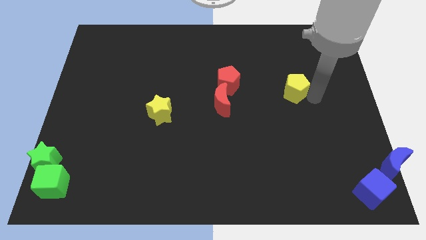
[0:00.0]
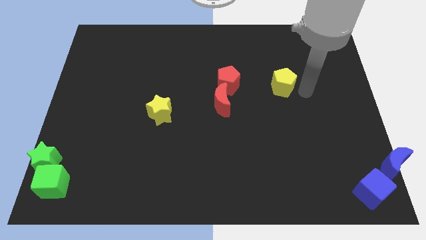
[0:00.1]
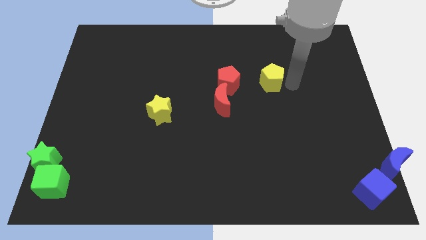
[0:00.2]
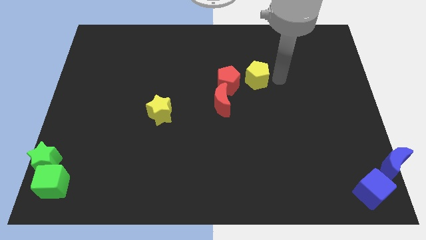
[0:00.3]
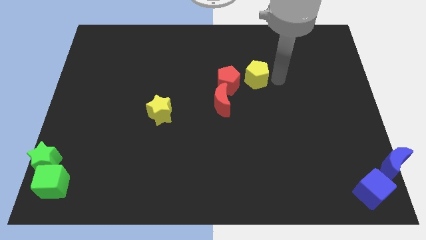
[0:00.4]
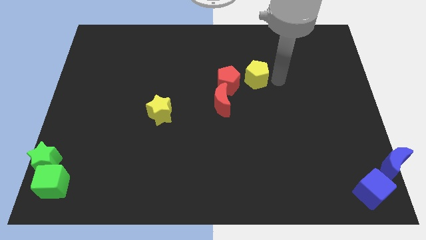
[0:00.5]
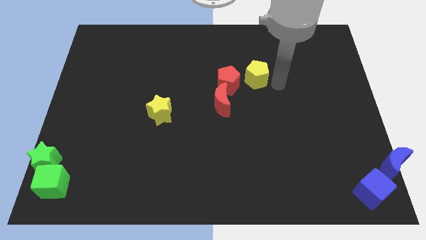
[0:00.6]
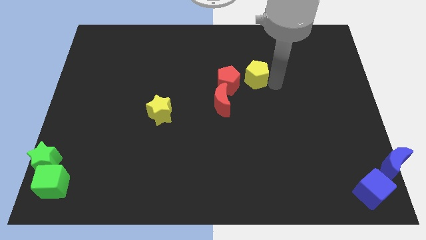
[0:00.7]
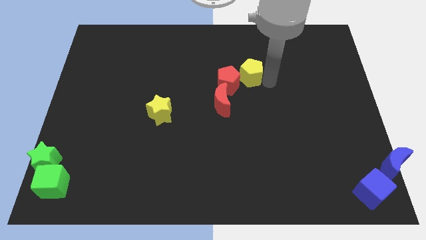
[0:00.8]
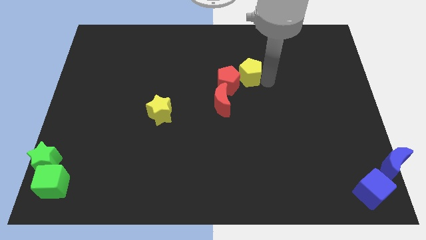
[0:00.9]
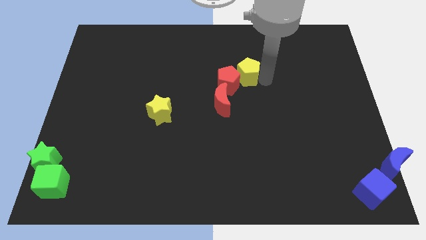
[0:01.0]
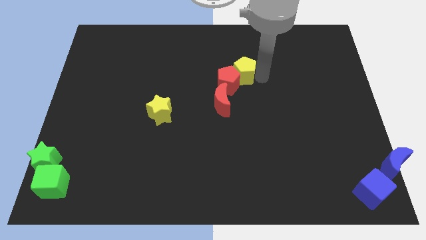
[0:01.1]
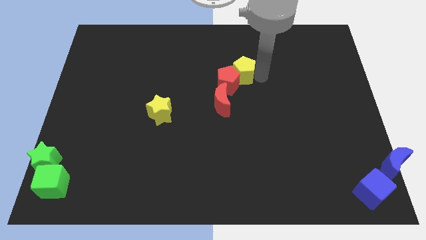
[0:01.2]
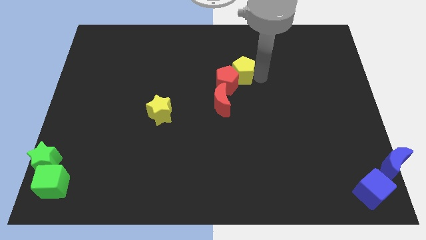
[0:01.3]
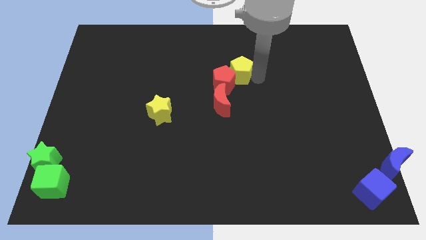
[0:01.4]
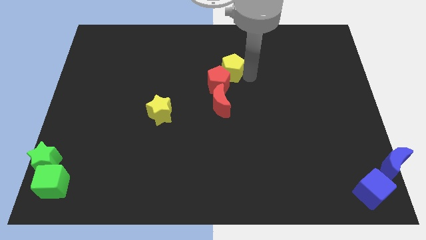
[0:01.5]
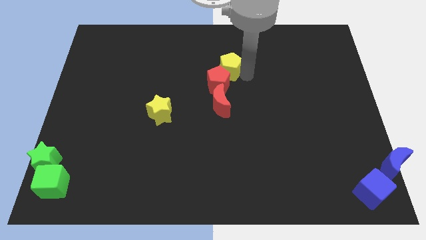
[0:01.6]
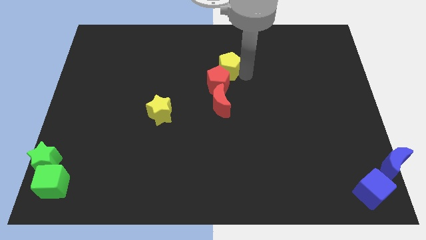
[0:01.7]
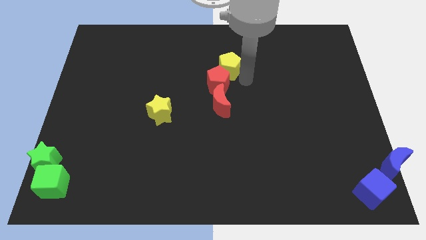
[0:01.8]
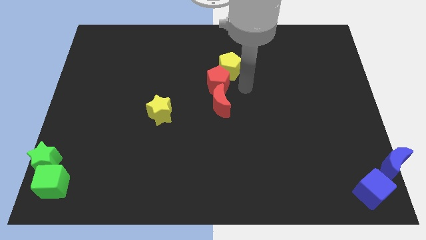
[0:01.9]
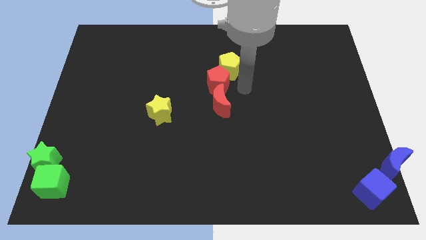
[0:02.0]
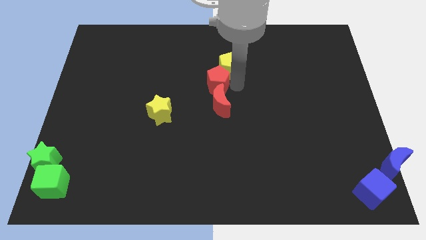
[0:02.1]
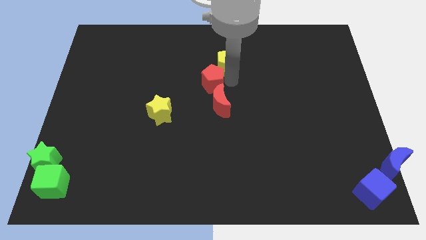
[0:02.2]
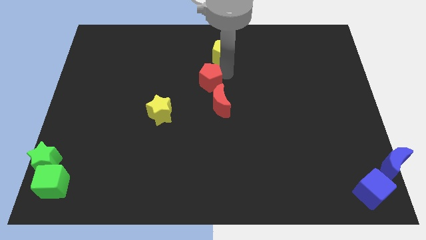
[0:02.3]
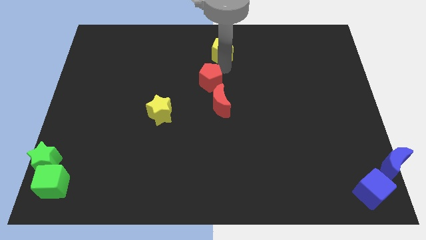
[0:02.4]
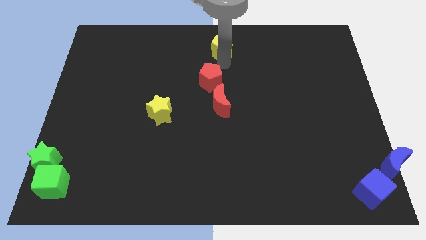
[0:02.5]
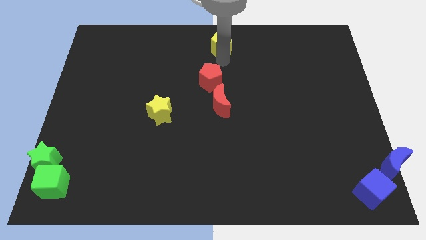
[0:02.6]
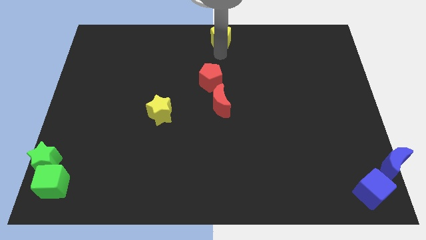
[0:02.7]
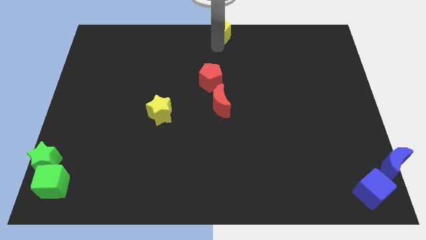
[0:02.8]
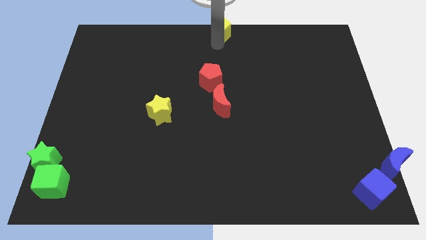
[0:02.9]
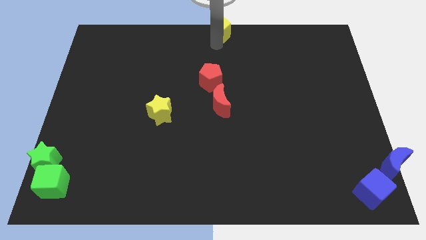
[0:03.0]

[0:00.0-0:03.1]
move the yellow pentagon to top center

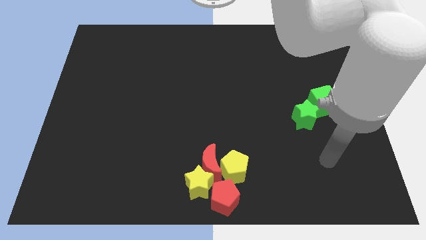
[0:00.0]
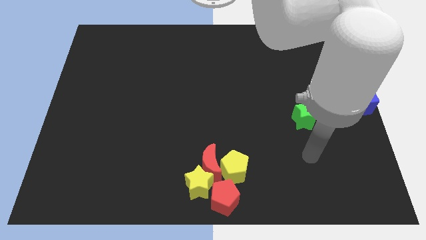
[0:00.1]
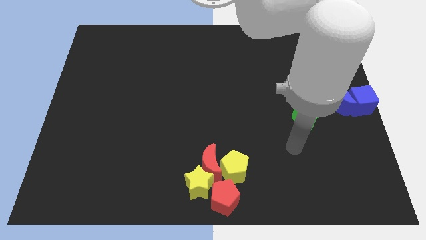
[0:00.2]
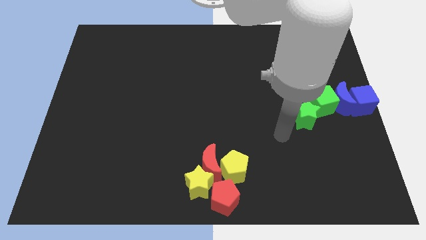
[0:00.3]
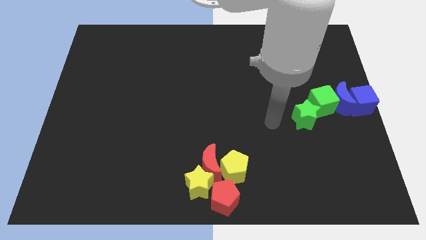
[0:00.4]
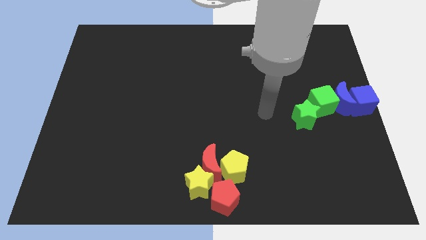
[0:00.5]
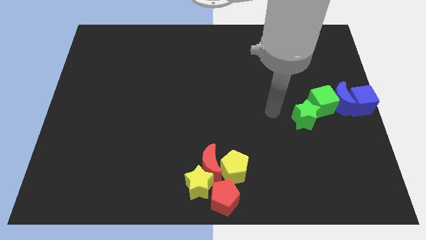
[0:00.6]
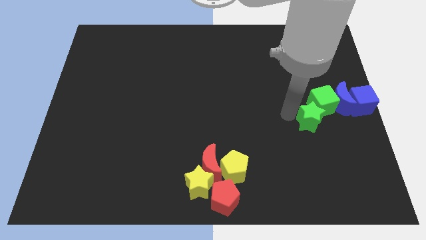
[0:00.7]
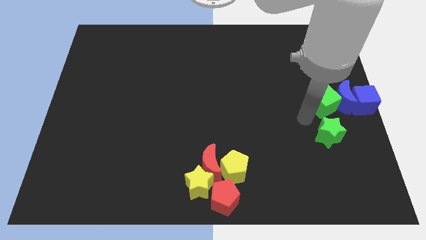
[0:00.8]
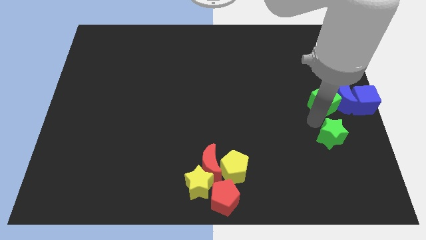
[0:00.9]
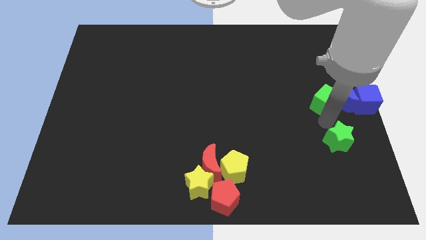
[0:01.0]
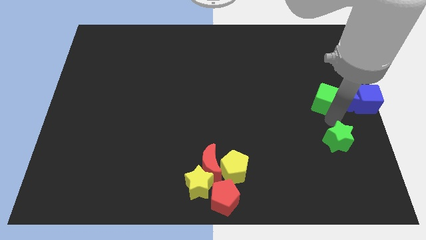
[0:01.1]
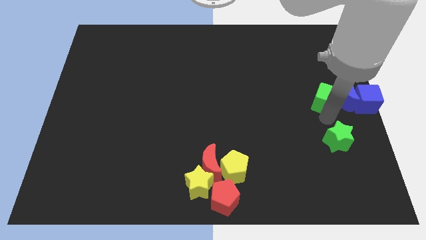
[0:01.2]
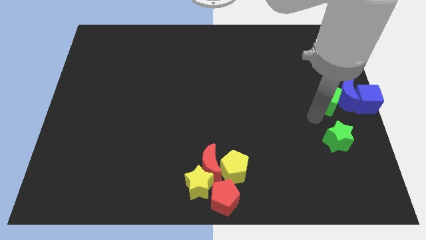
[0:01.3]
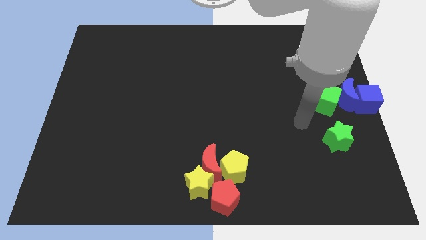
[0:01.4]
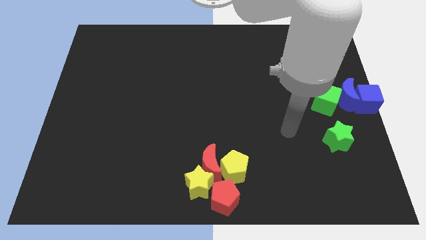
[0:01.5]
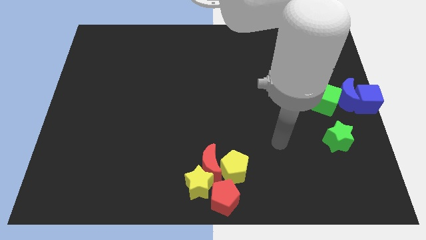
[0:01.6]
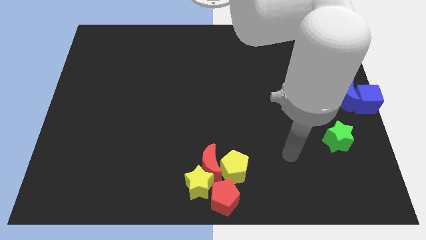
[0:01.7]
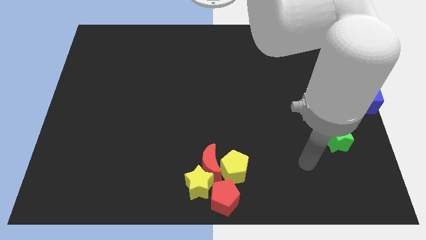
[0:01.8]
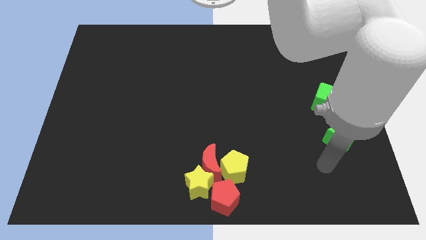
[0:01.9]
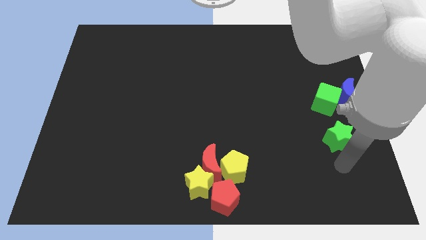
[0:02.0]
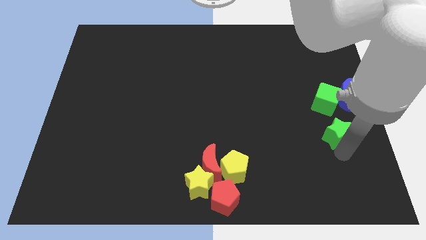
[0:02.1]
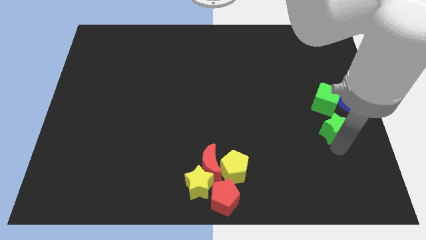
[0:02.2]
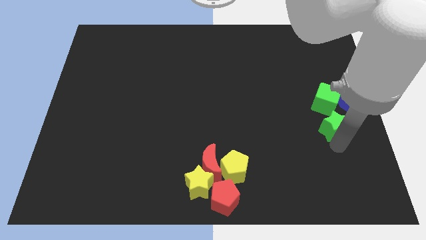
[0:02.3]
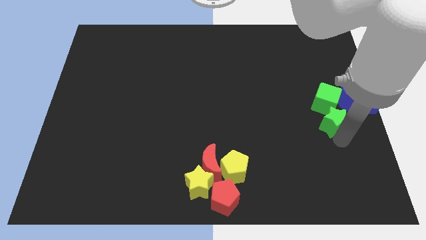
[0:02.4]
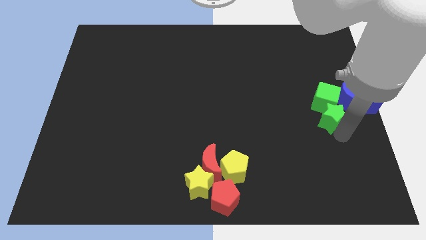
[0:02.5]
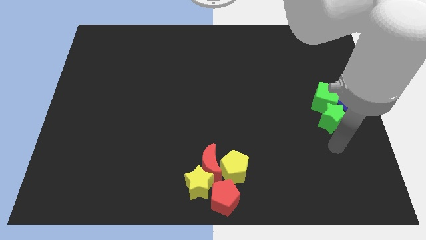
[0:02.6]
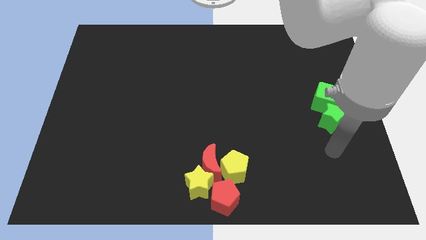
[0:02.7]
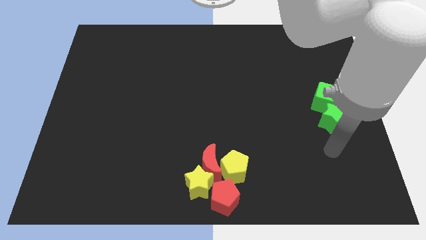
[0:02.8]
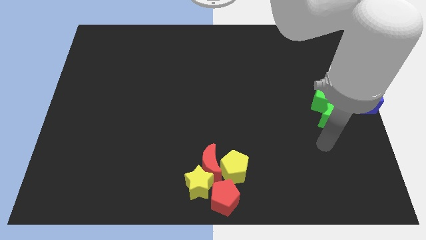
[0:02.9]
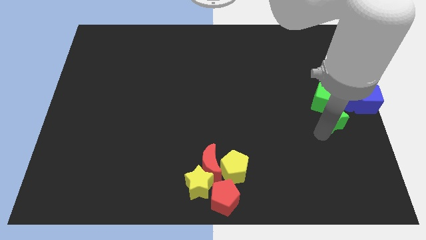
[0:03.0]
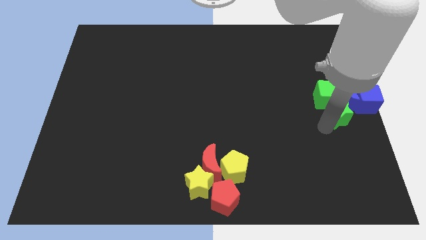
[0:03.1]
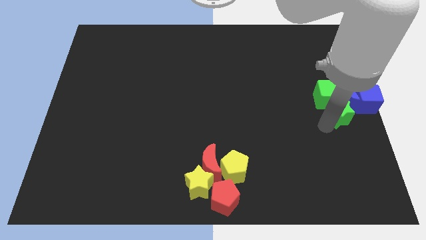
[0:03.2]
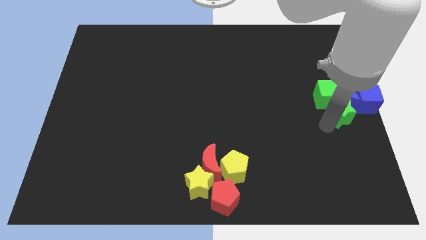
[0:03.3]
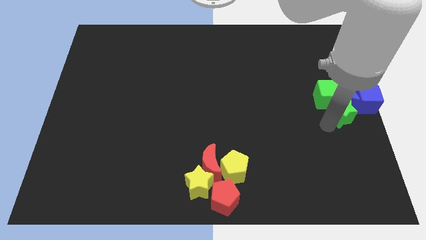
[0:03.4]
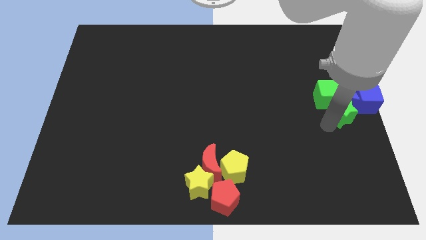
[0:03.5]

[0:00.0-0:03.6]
make a group of green and blue blocks at the right center of the board

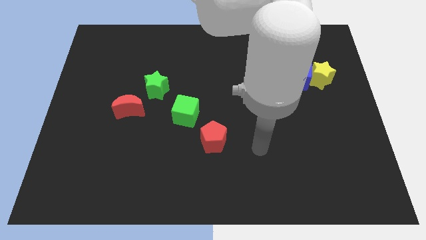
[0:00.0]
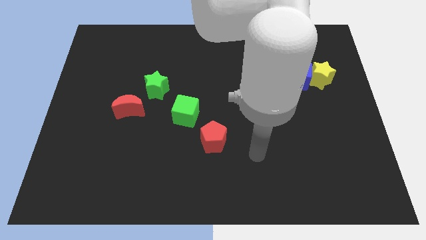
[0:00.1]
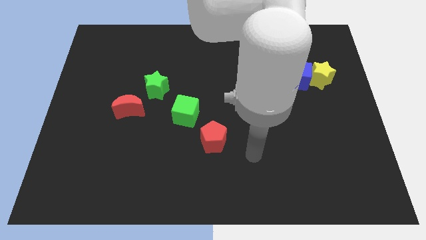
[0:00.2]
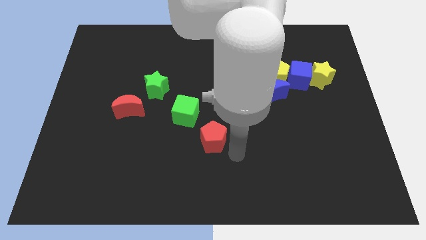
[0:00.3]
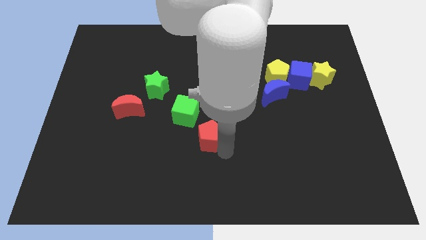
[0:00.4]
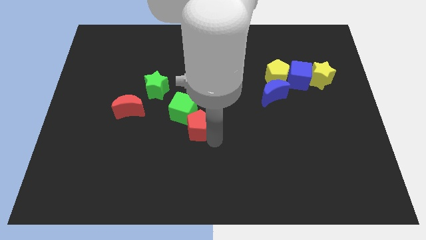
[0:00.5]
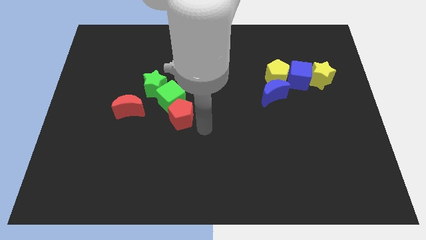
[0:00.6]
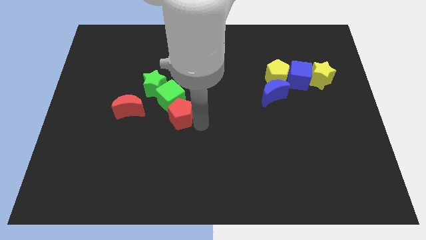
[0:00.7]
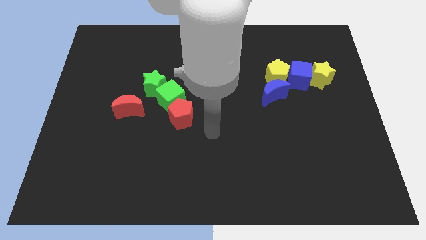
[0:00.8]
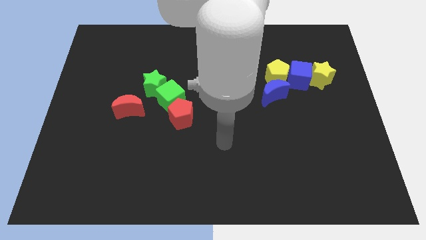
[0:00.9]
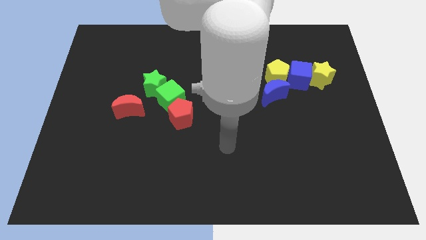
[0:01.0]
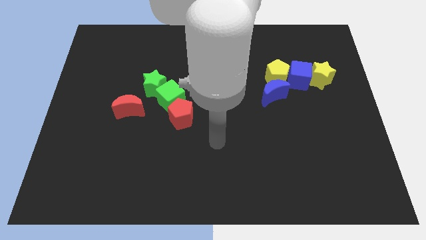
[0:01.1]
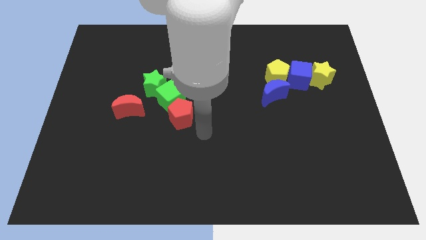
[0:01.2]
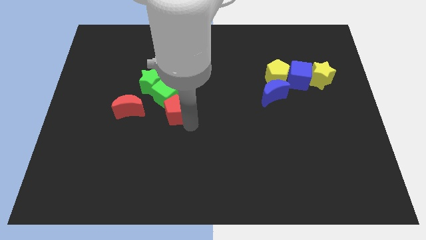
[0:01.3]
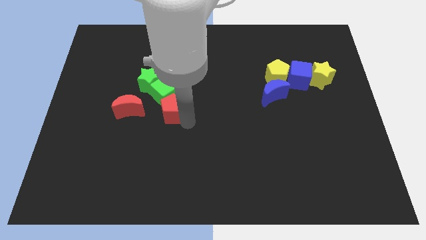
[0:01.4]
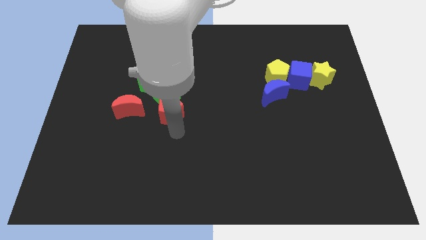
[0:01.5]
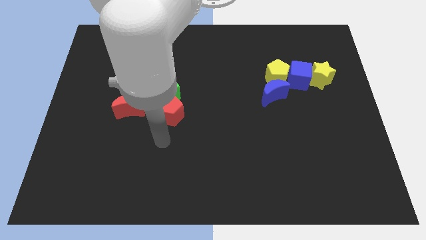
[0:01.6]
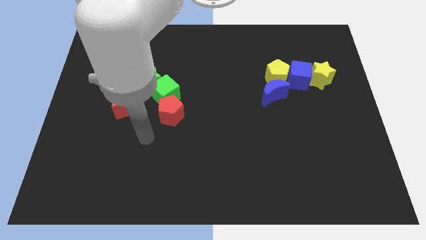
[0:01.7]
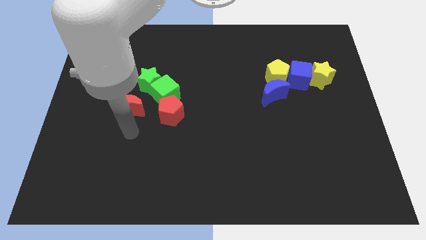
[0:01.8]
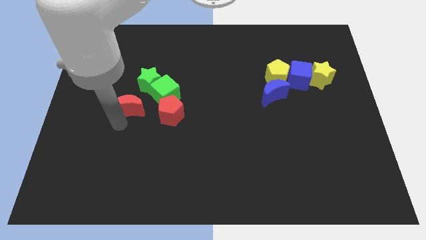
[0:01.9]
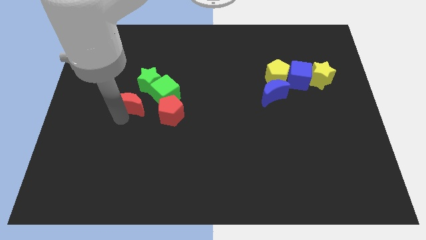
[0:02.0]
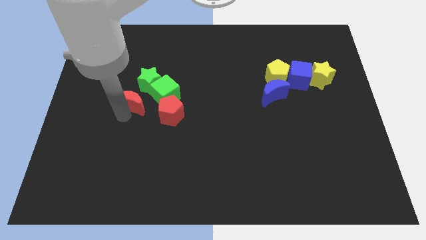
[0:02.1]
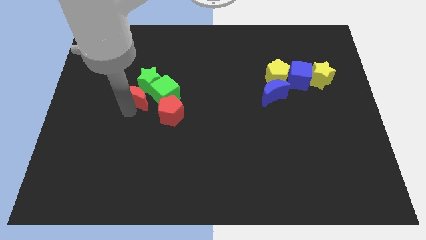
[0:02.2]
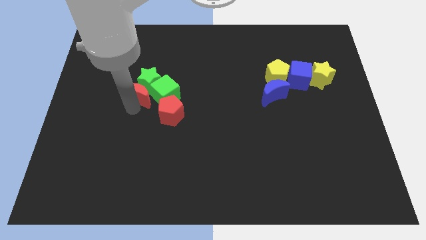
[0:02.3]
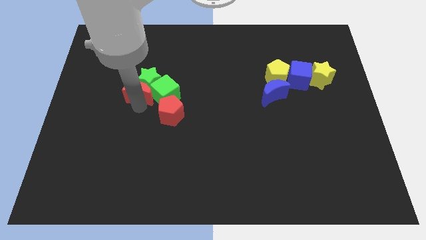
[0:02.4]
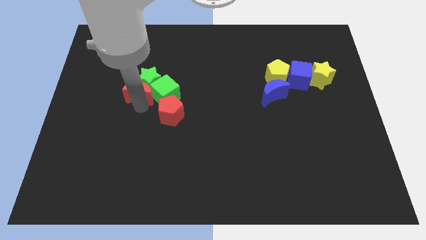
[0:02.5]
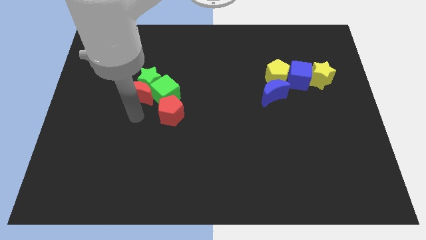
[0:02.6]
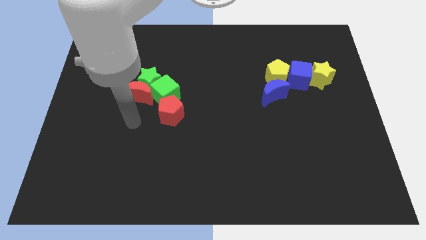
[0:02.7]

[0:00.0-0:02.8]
make a group of red and green blocks
